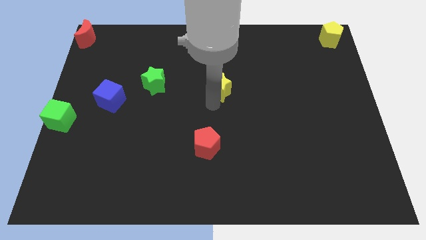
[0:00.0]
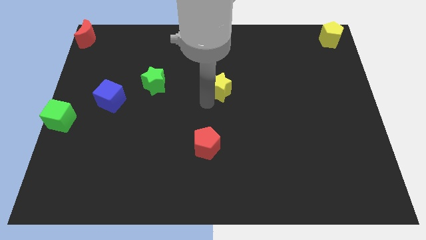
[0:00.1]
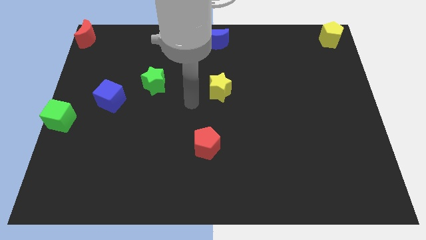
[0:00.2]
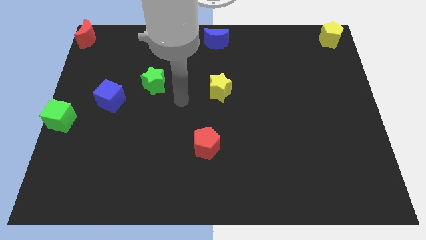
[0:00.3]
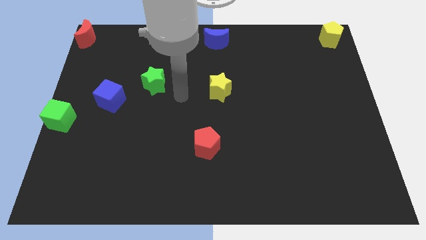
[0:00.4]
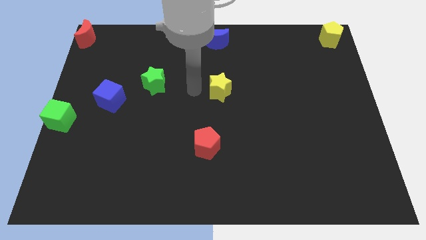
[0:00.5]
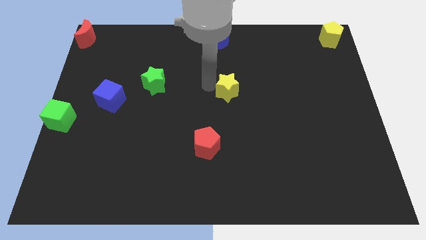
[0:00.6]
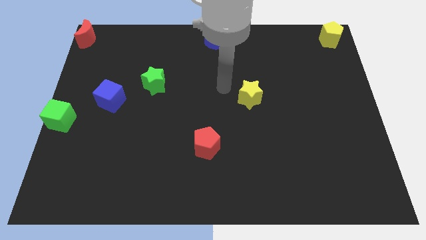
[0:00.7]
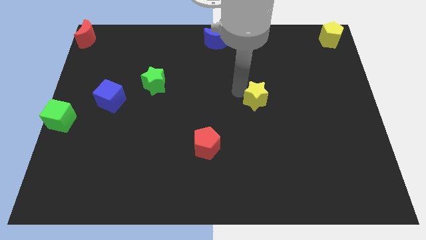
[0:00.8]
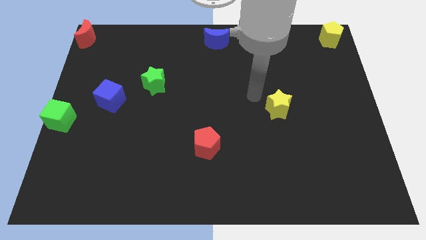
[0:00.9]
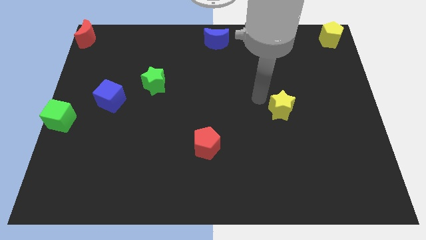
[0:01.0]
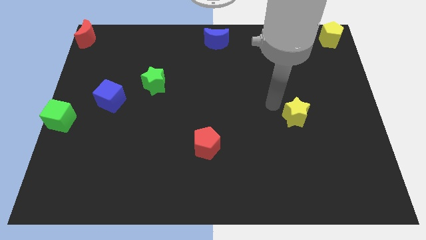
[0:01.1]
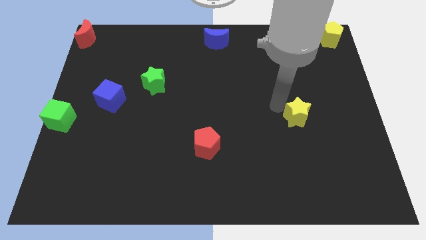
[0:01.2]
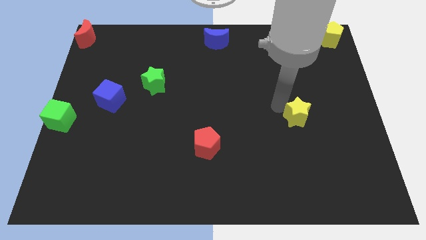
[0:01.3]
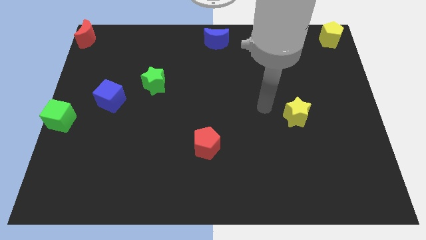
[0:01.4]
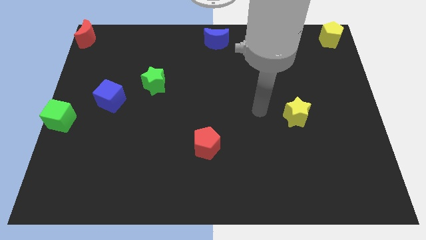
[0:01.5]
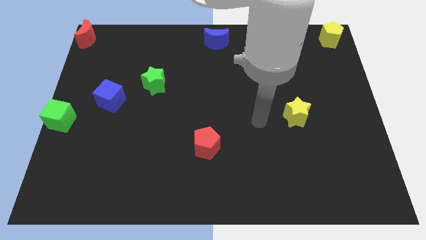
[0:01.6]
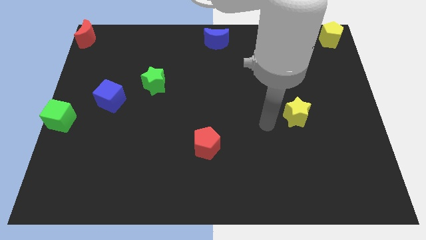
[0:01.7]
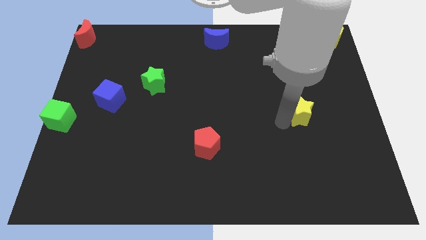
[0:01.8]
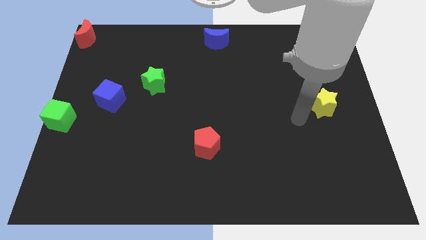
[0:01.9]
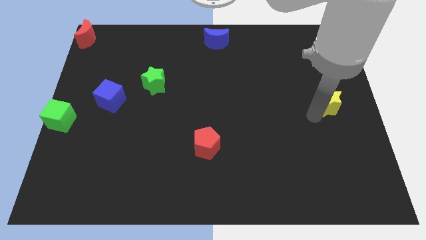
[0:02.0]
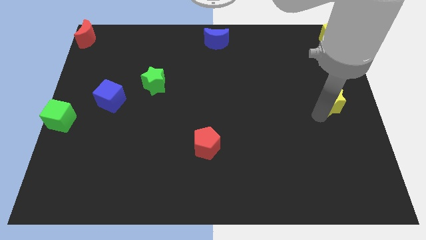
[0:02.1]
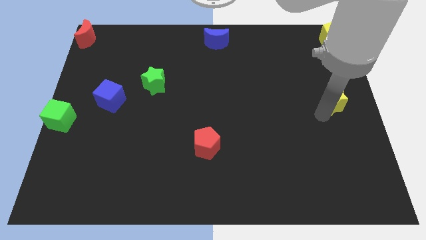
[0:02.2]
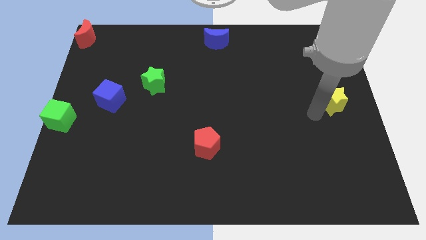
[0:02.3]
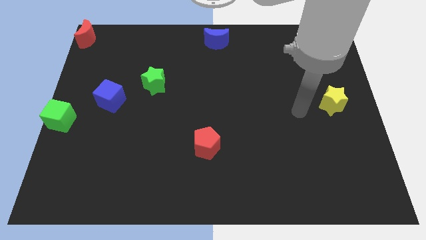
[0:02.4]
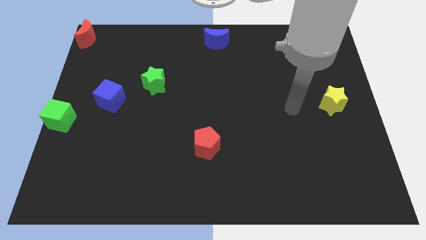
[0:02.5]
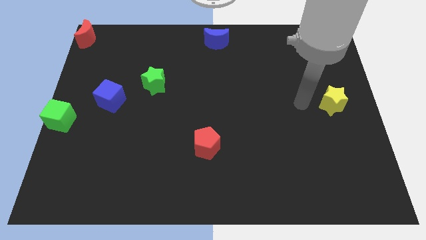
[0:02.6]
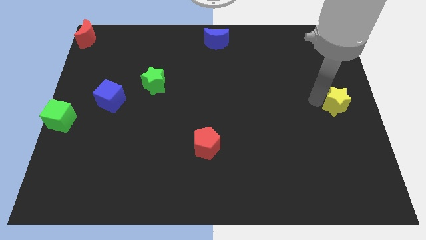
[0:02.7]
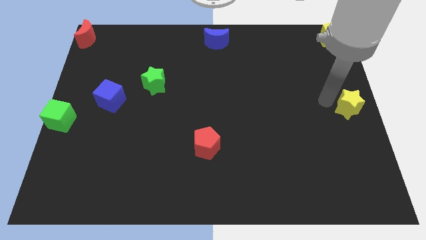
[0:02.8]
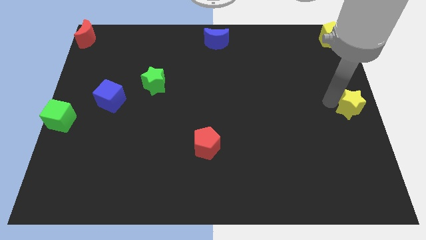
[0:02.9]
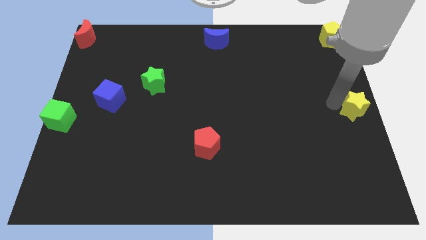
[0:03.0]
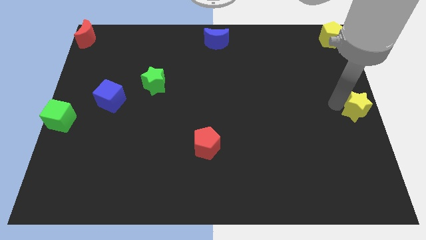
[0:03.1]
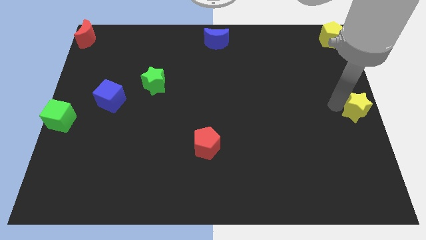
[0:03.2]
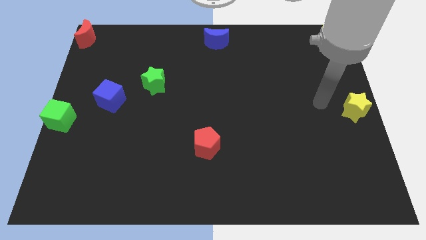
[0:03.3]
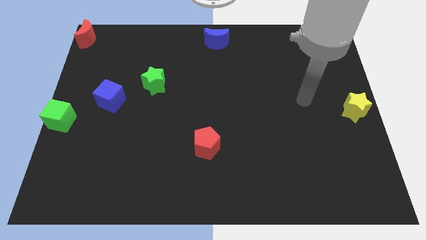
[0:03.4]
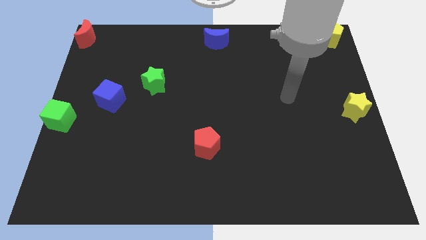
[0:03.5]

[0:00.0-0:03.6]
move the yellow star to the center right of the board

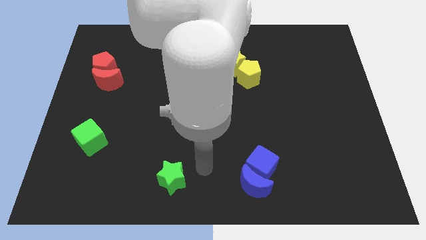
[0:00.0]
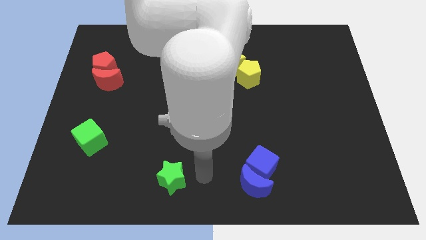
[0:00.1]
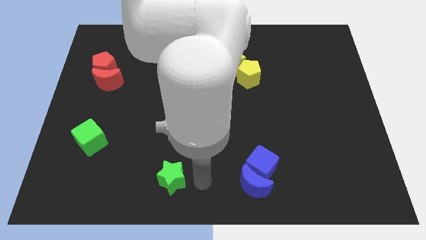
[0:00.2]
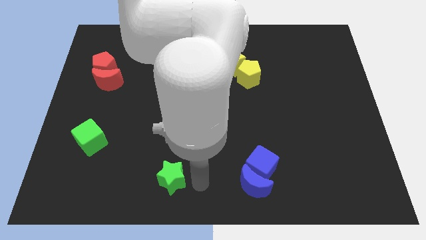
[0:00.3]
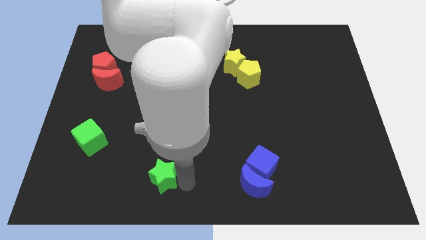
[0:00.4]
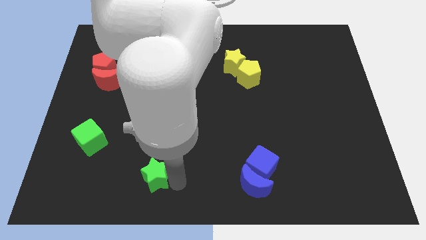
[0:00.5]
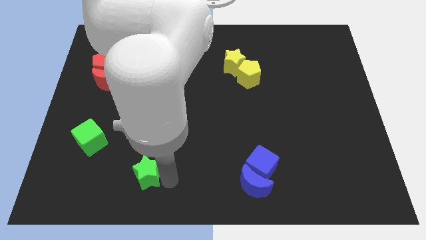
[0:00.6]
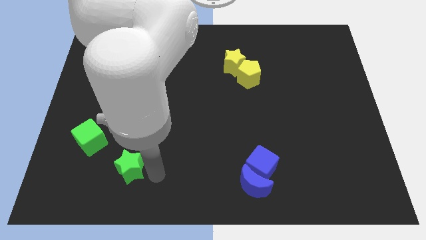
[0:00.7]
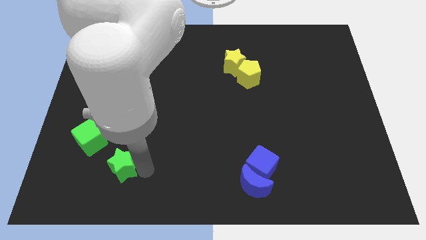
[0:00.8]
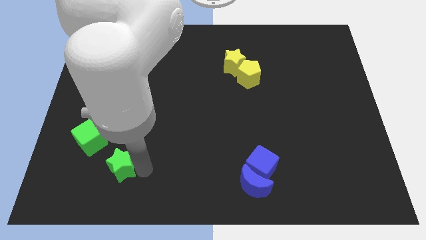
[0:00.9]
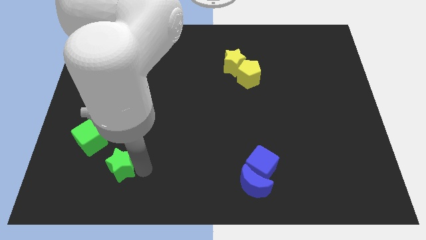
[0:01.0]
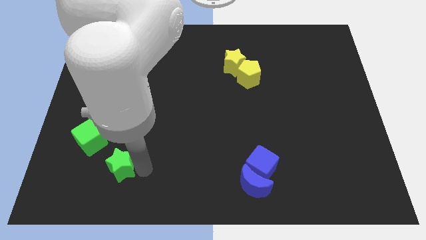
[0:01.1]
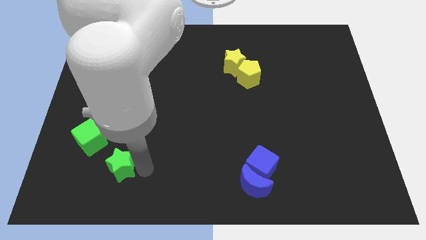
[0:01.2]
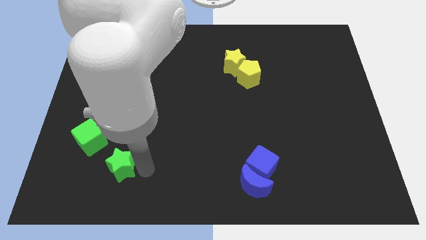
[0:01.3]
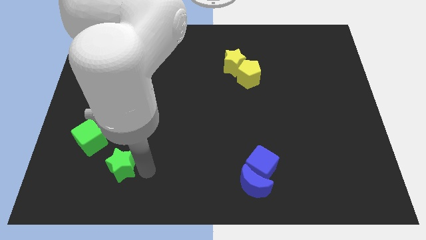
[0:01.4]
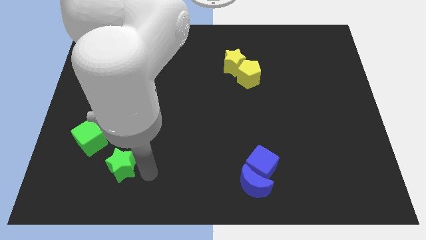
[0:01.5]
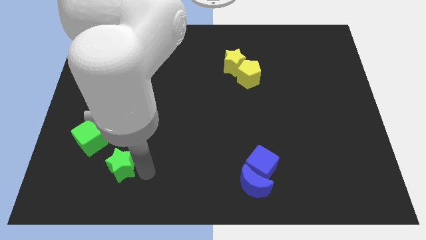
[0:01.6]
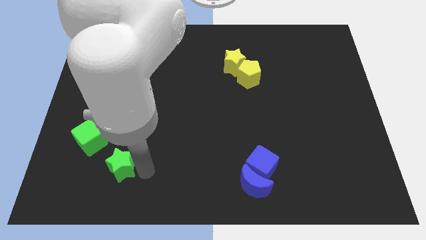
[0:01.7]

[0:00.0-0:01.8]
move the green star diagonally to the green cube

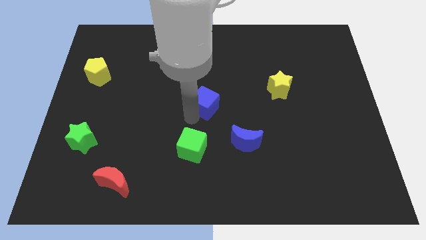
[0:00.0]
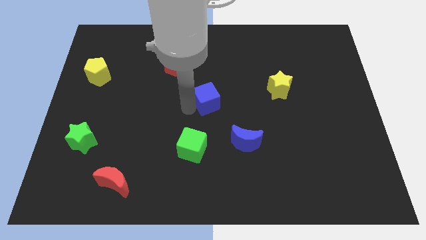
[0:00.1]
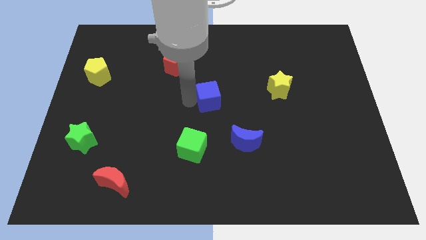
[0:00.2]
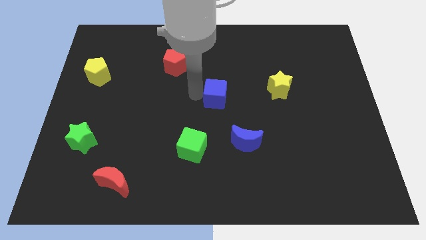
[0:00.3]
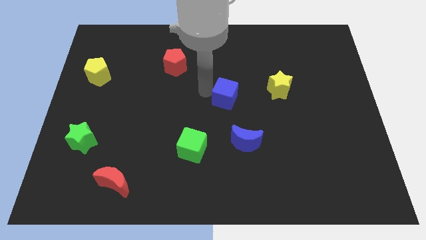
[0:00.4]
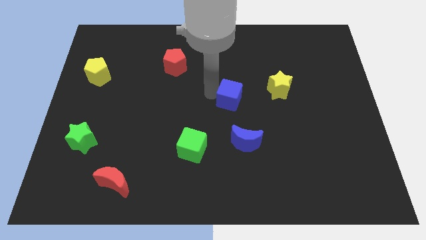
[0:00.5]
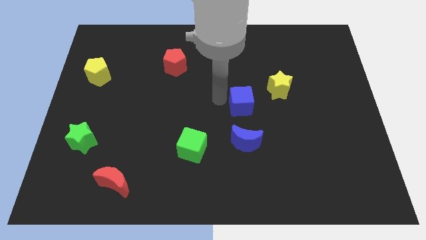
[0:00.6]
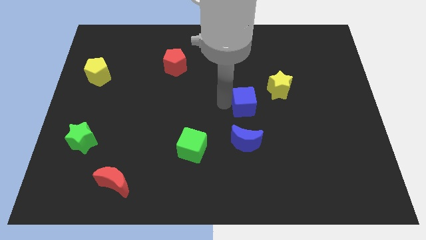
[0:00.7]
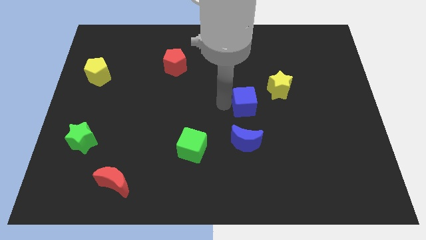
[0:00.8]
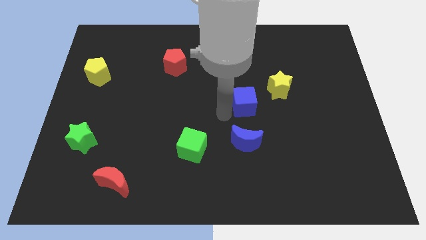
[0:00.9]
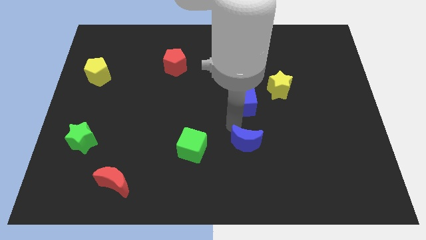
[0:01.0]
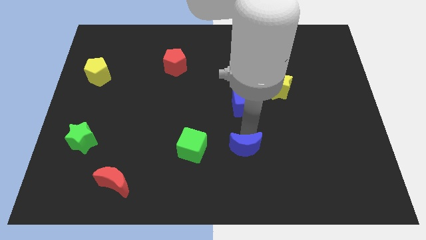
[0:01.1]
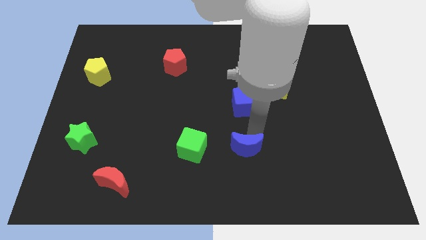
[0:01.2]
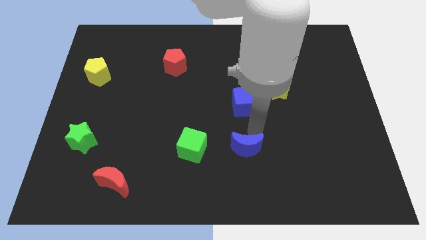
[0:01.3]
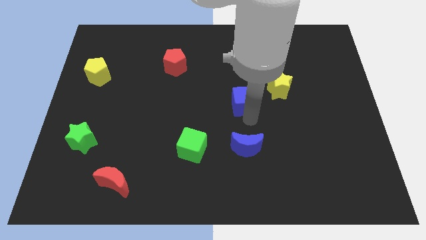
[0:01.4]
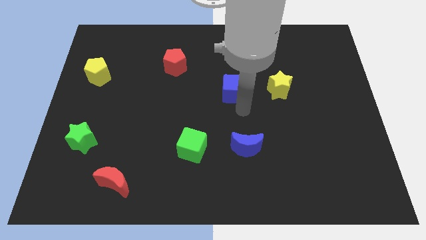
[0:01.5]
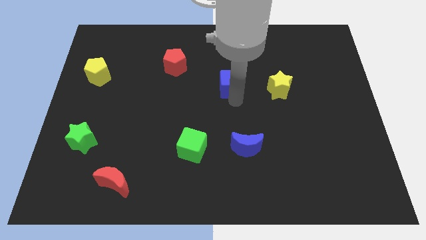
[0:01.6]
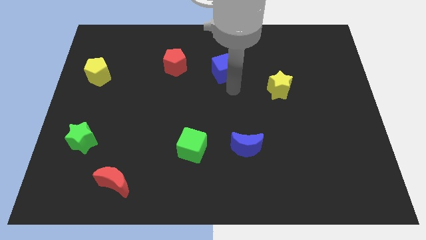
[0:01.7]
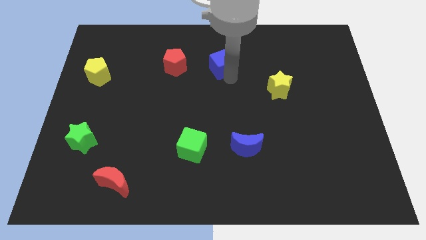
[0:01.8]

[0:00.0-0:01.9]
place the blue cube to the right side of red pentagon

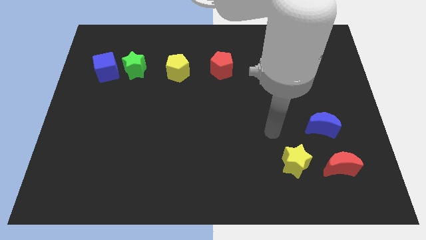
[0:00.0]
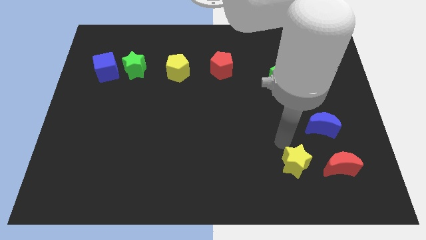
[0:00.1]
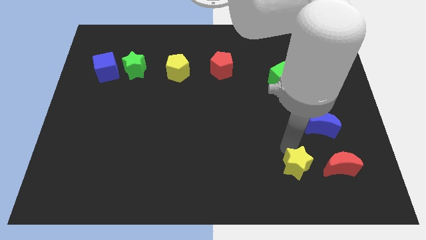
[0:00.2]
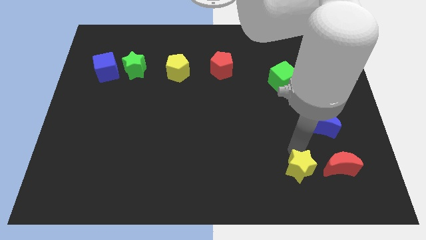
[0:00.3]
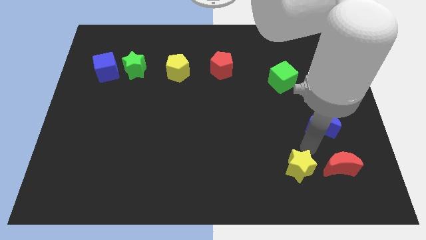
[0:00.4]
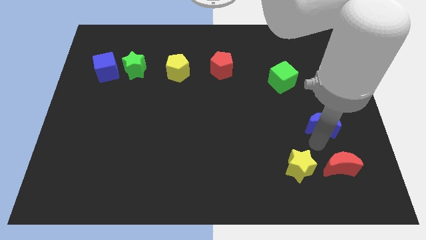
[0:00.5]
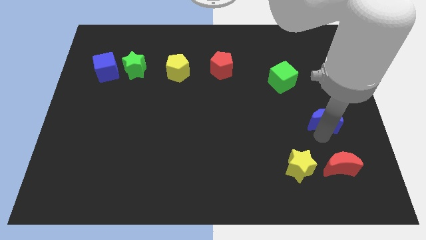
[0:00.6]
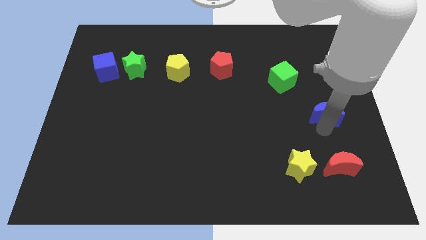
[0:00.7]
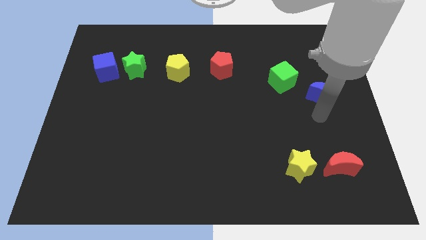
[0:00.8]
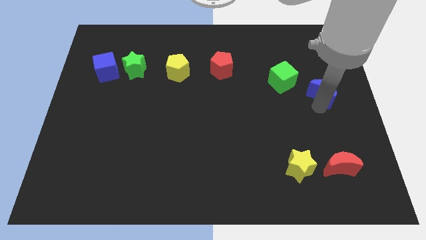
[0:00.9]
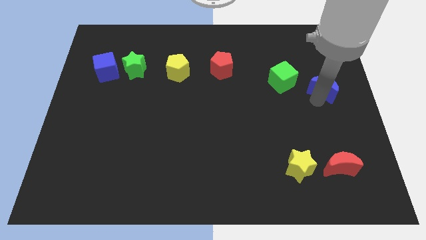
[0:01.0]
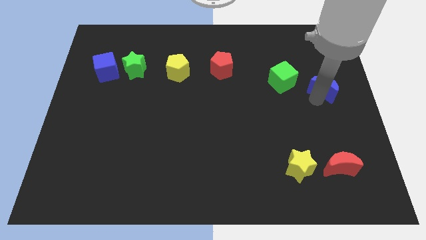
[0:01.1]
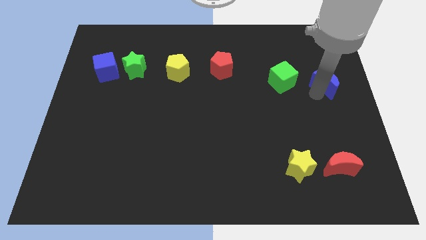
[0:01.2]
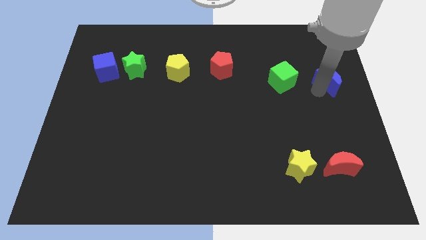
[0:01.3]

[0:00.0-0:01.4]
push the blue crescent to the right side of the green cube

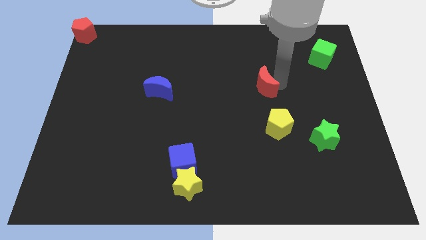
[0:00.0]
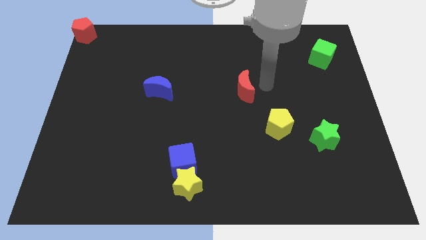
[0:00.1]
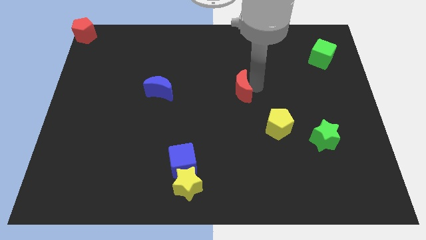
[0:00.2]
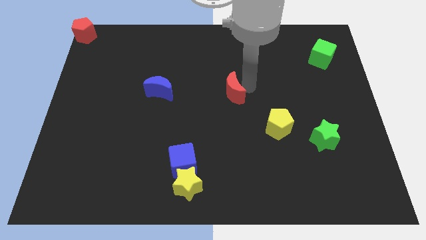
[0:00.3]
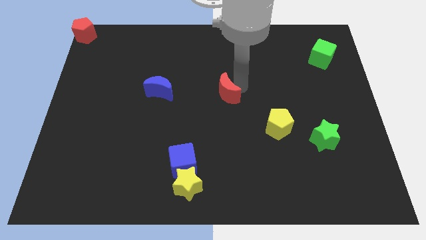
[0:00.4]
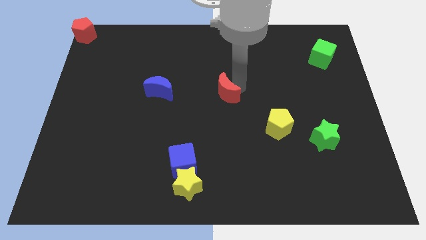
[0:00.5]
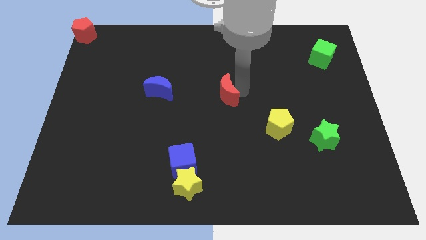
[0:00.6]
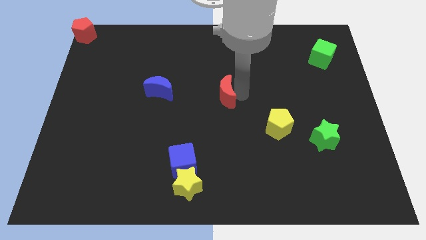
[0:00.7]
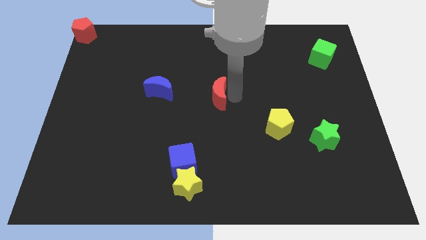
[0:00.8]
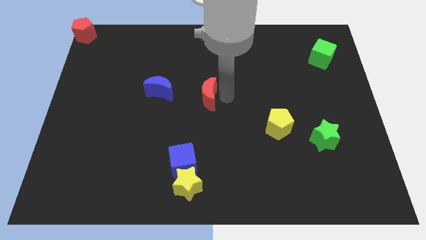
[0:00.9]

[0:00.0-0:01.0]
push the red crescent to the center of the board
